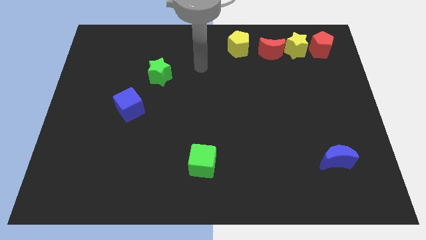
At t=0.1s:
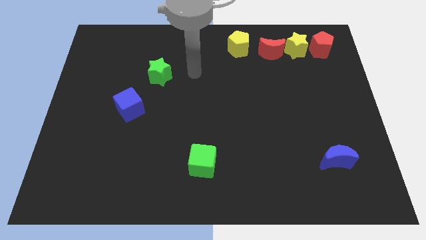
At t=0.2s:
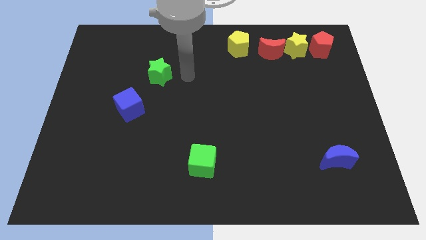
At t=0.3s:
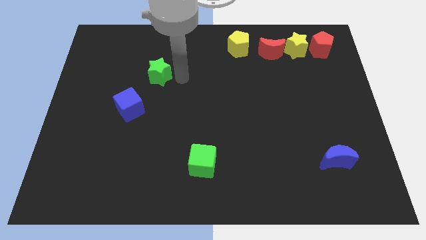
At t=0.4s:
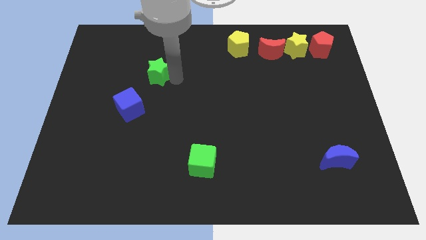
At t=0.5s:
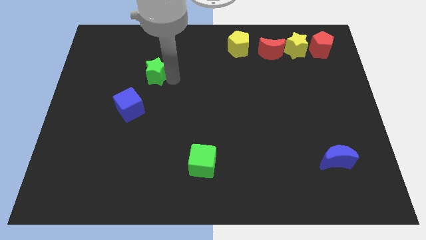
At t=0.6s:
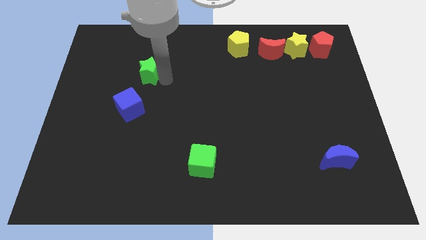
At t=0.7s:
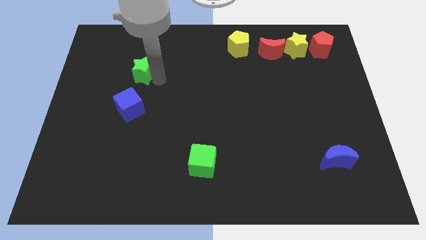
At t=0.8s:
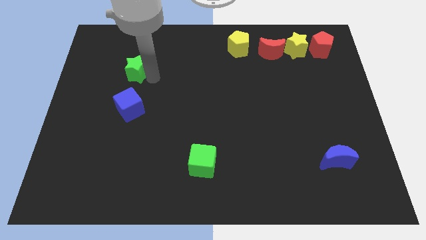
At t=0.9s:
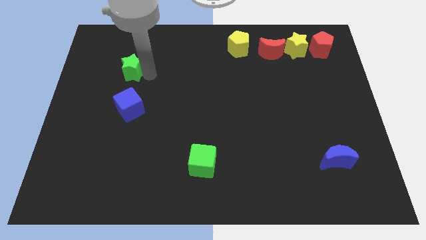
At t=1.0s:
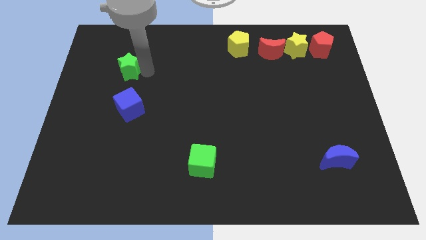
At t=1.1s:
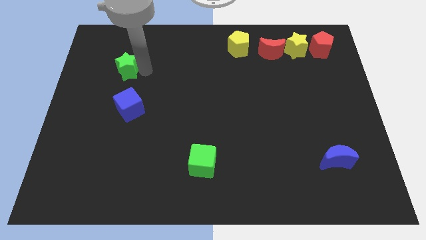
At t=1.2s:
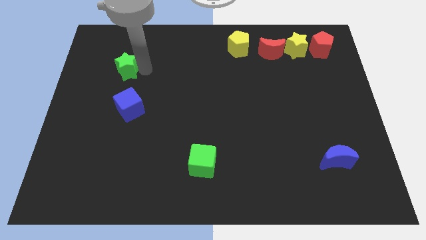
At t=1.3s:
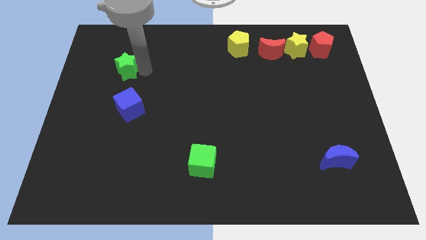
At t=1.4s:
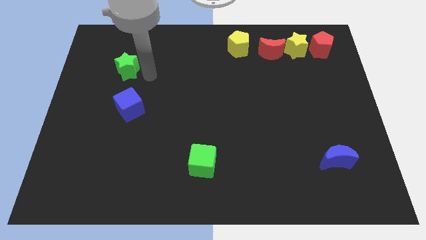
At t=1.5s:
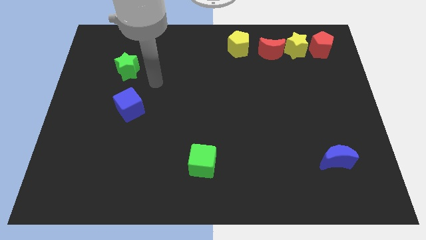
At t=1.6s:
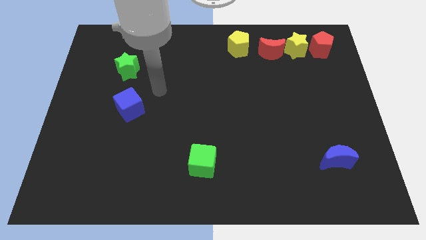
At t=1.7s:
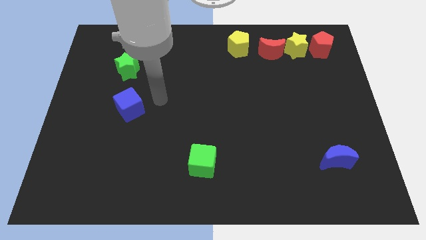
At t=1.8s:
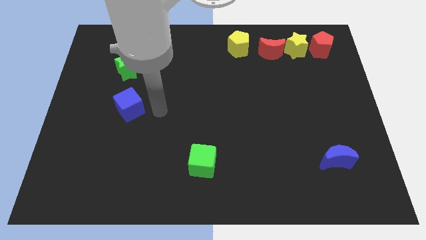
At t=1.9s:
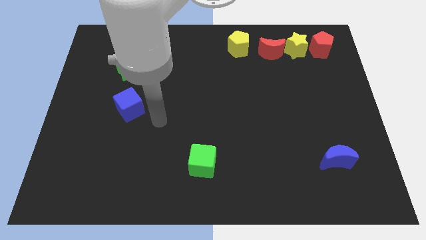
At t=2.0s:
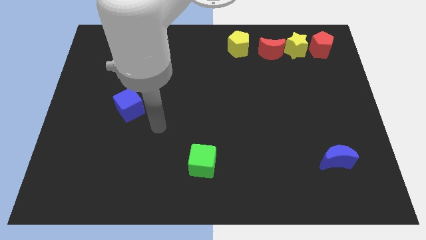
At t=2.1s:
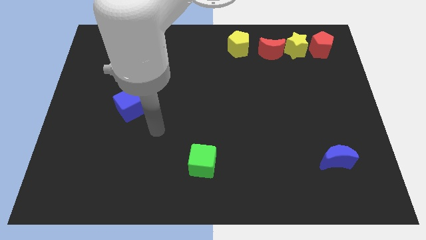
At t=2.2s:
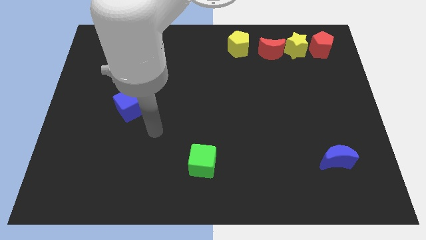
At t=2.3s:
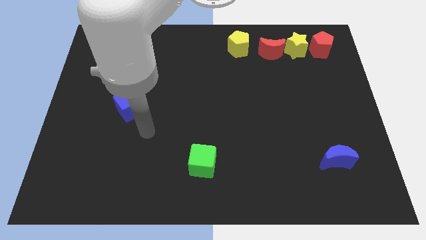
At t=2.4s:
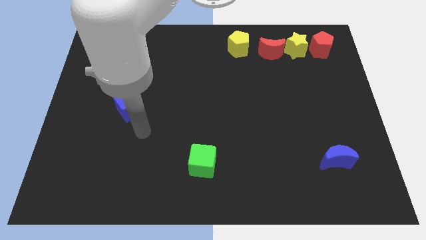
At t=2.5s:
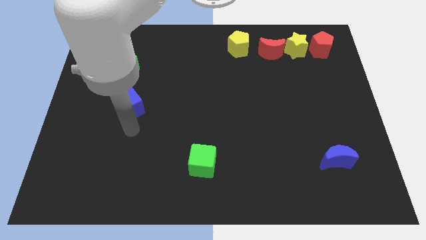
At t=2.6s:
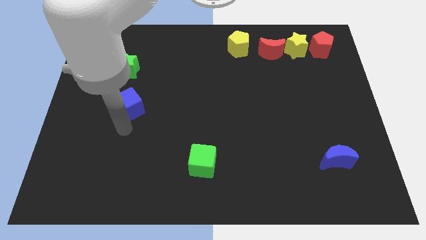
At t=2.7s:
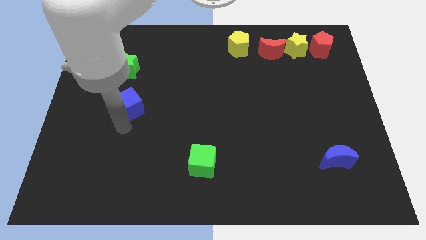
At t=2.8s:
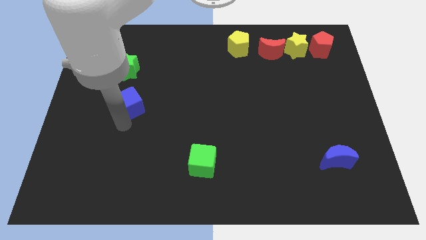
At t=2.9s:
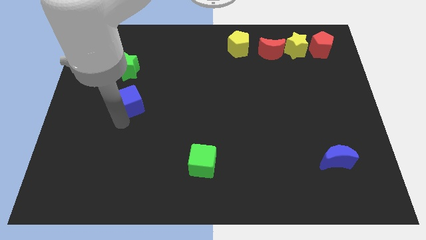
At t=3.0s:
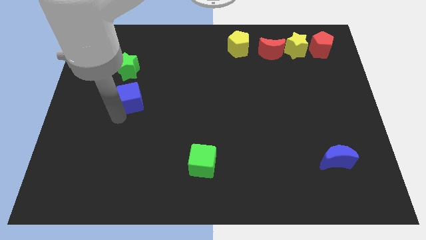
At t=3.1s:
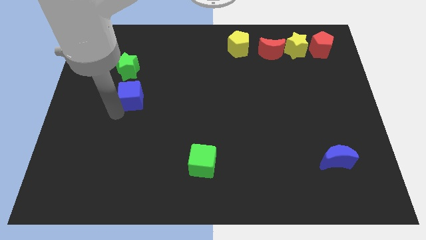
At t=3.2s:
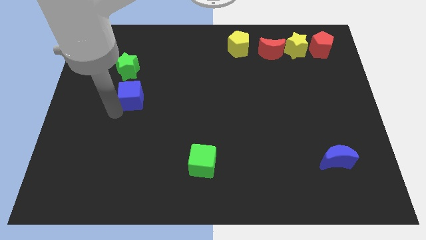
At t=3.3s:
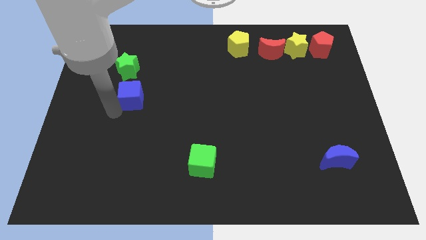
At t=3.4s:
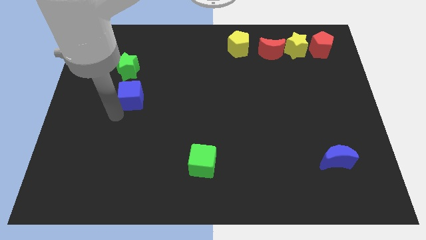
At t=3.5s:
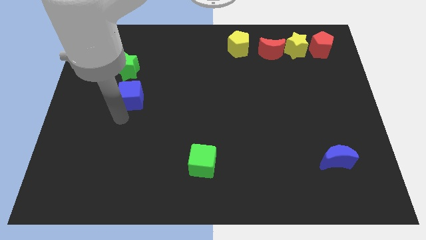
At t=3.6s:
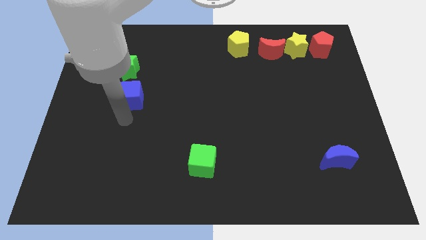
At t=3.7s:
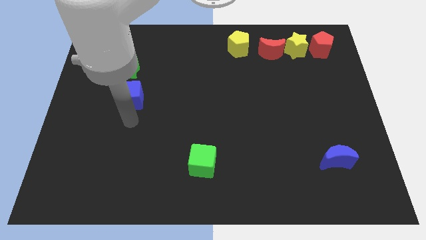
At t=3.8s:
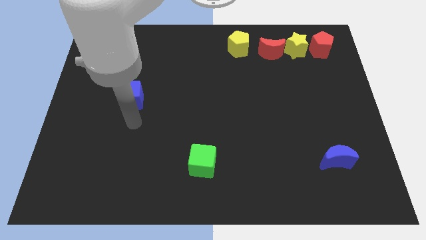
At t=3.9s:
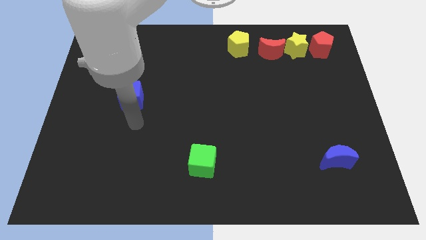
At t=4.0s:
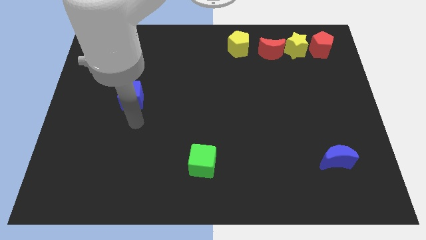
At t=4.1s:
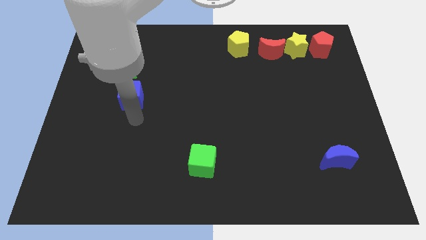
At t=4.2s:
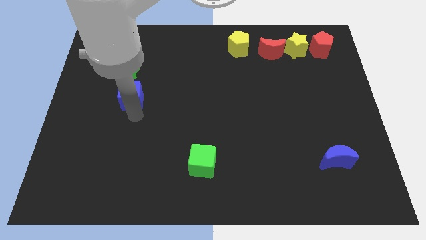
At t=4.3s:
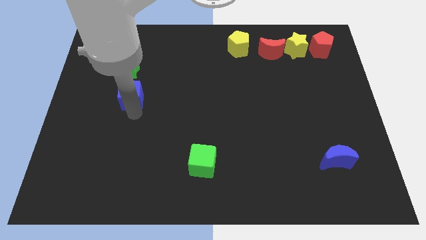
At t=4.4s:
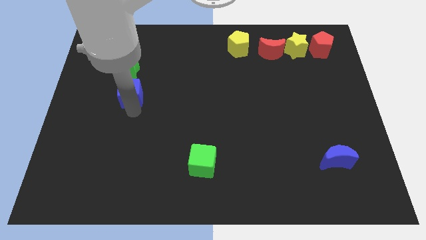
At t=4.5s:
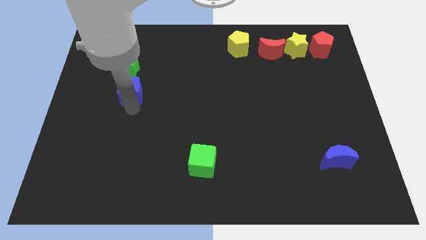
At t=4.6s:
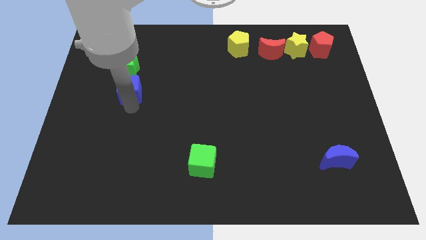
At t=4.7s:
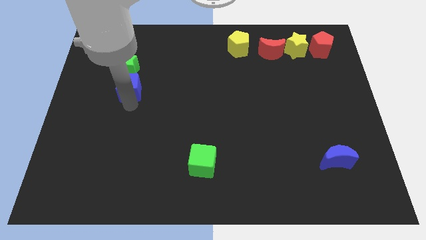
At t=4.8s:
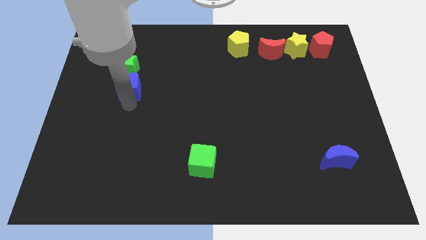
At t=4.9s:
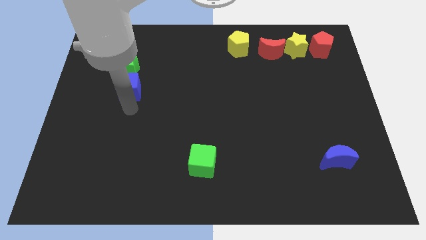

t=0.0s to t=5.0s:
group up the green star and blue cube at the left side of the board

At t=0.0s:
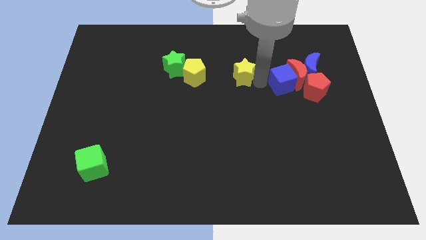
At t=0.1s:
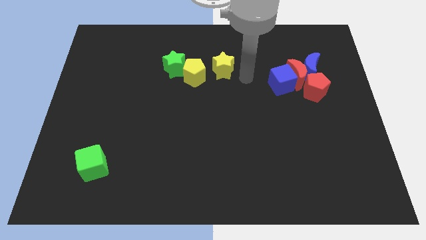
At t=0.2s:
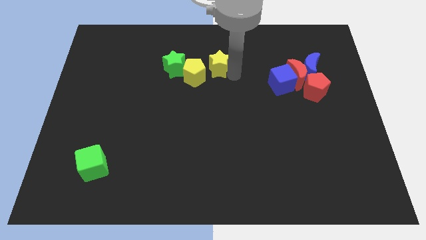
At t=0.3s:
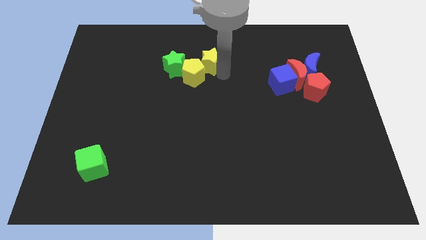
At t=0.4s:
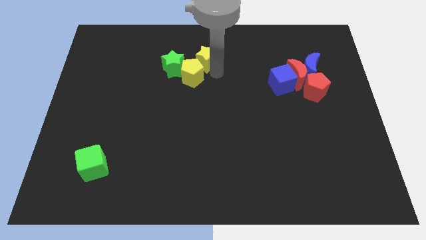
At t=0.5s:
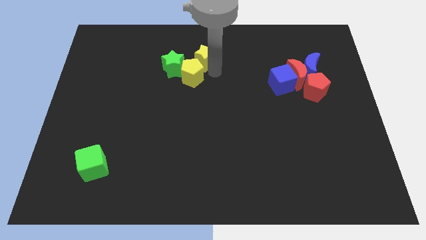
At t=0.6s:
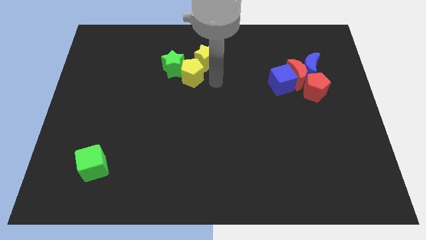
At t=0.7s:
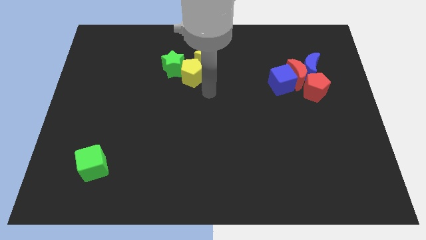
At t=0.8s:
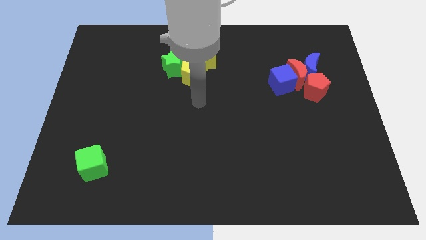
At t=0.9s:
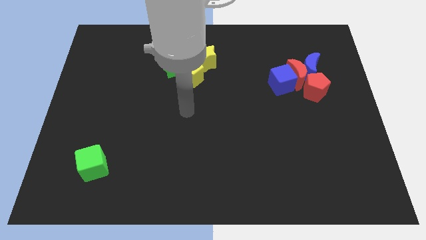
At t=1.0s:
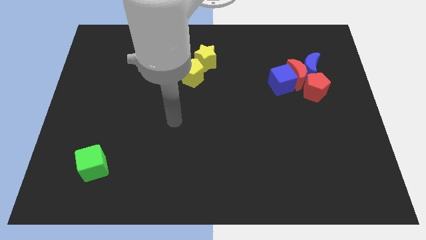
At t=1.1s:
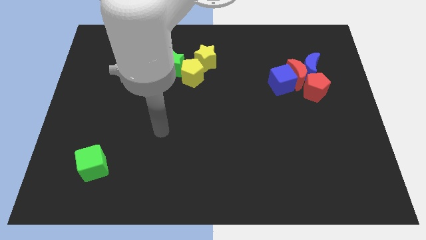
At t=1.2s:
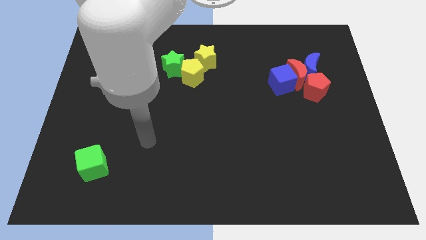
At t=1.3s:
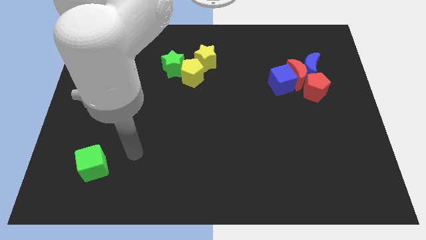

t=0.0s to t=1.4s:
slide the yellow star into the the yellow pentagon diagonally

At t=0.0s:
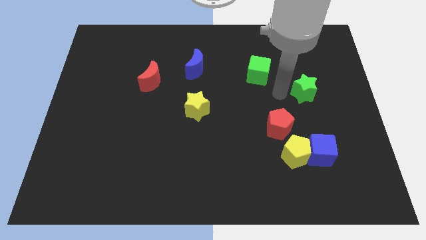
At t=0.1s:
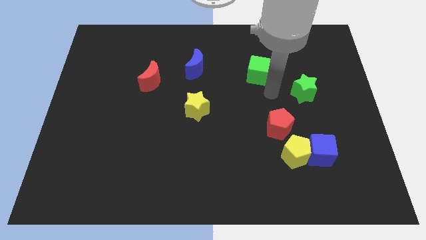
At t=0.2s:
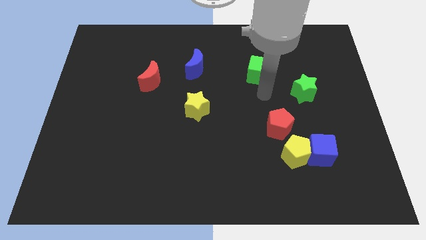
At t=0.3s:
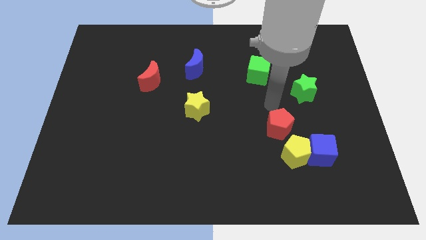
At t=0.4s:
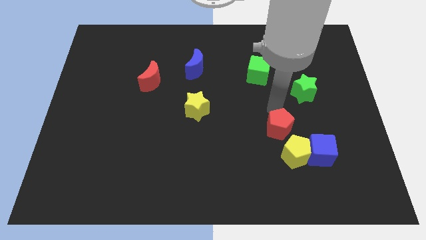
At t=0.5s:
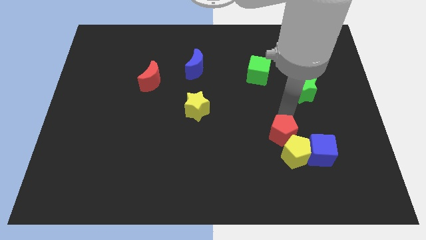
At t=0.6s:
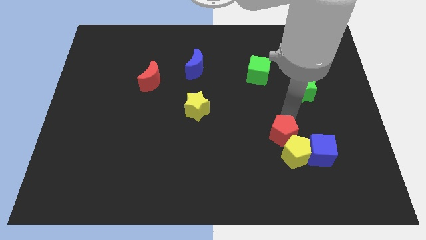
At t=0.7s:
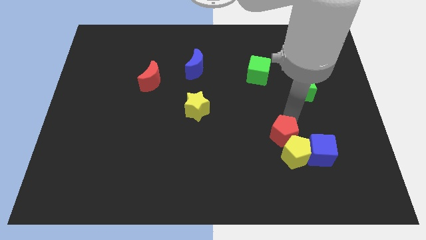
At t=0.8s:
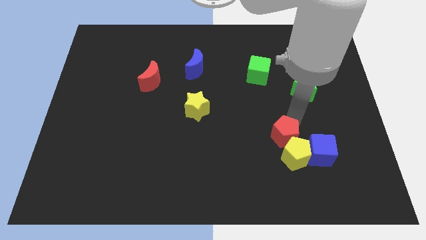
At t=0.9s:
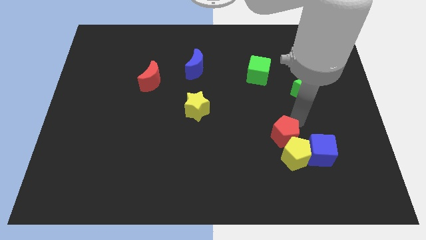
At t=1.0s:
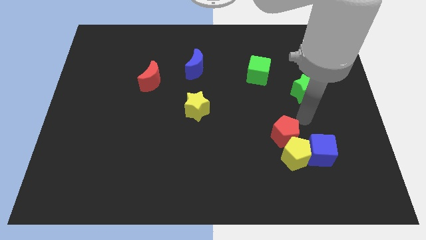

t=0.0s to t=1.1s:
push the red pentagon into the yellow pentagon

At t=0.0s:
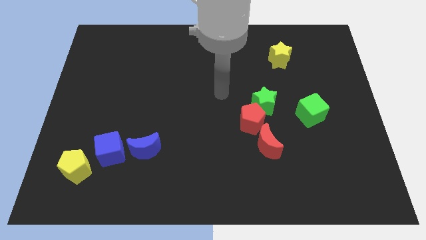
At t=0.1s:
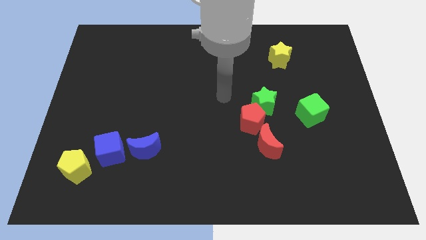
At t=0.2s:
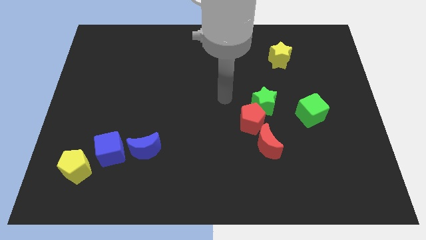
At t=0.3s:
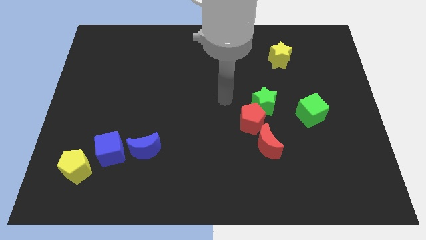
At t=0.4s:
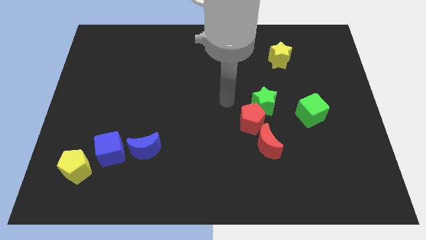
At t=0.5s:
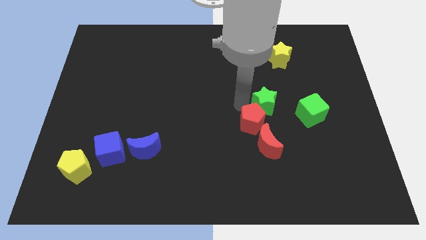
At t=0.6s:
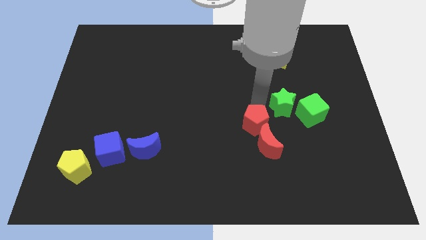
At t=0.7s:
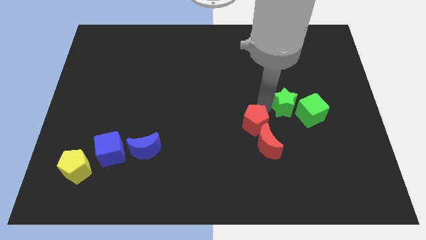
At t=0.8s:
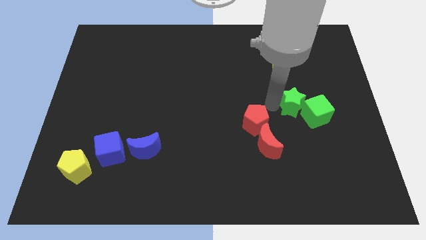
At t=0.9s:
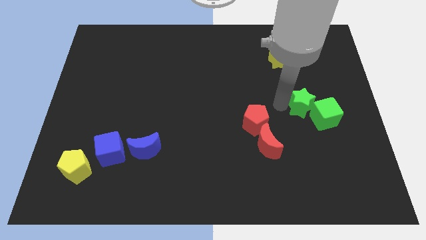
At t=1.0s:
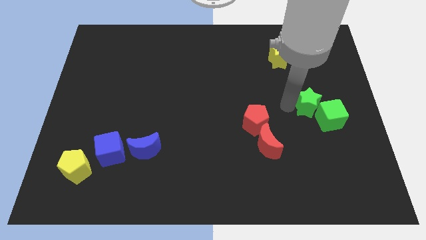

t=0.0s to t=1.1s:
push the green star into the green cube

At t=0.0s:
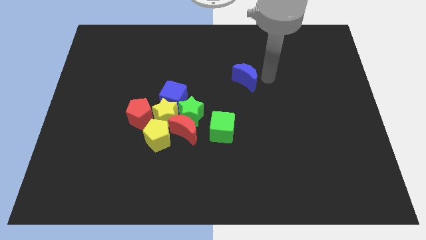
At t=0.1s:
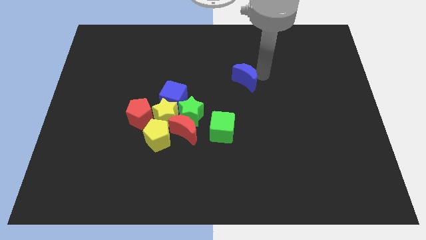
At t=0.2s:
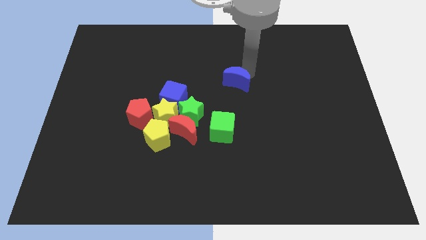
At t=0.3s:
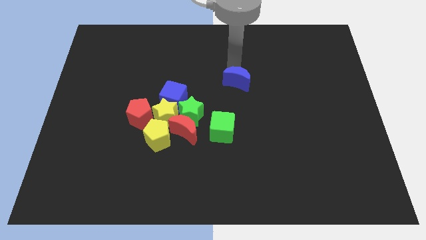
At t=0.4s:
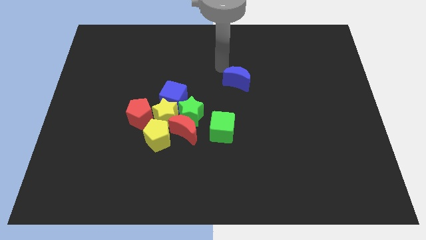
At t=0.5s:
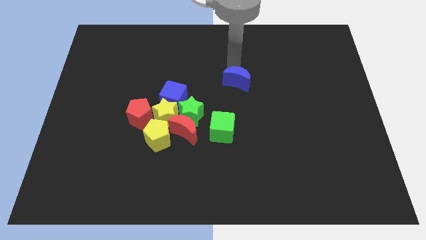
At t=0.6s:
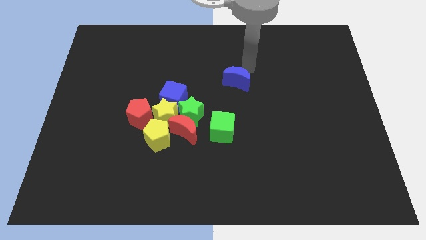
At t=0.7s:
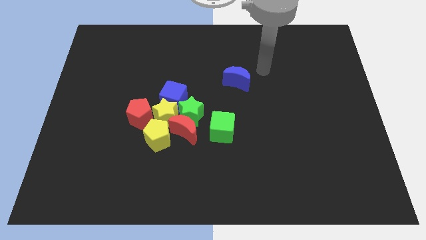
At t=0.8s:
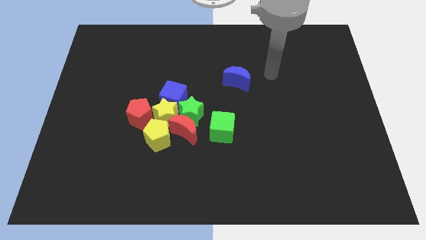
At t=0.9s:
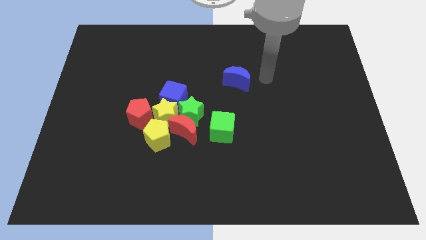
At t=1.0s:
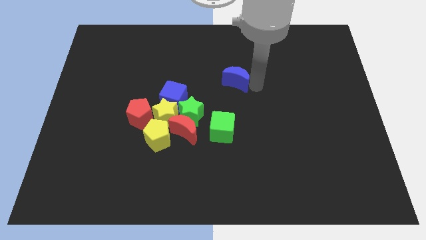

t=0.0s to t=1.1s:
push the blue crescent towards the group of blocks
